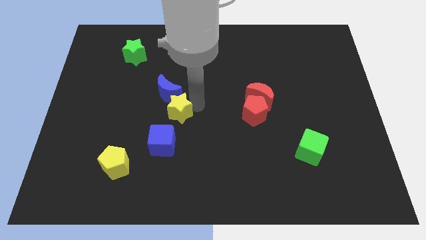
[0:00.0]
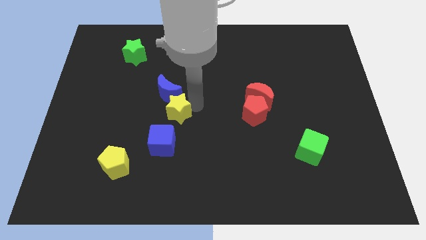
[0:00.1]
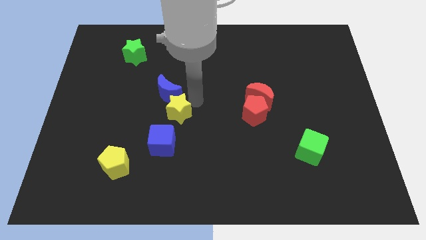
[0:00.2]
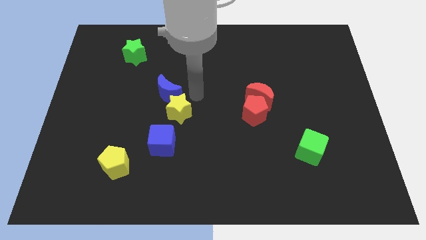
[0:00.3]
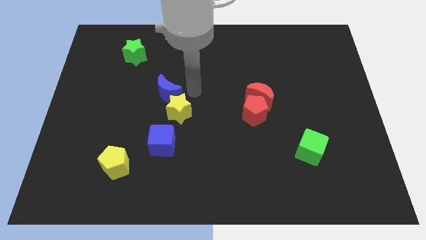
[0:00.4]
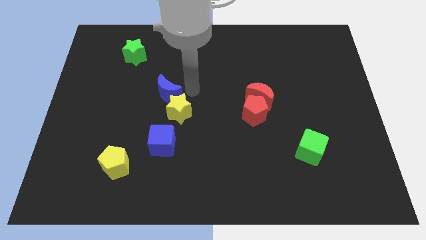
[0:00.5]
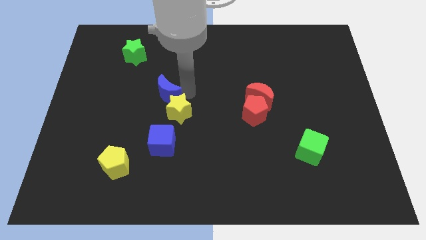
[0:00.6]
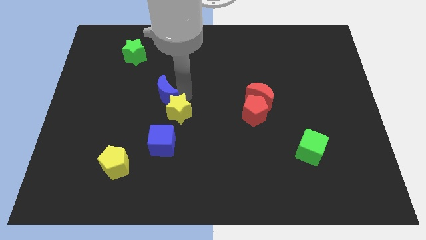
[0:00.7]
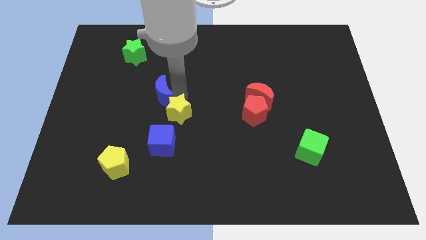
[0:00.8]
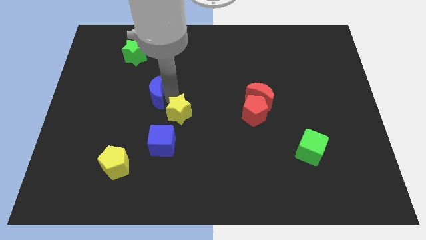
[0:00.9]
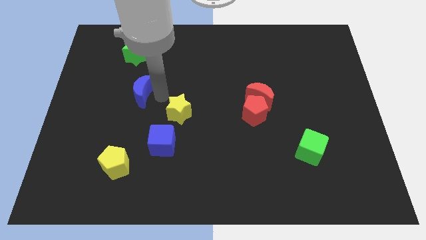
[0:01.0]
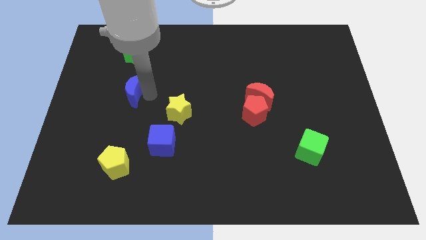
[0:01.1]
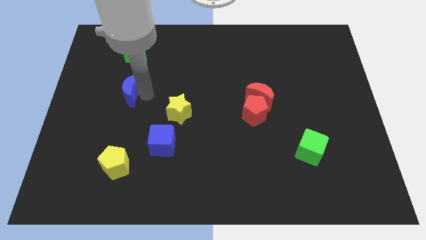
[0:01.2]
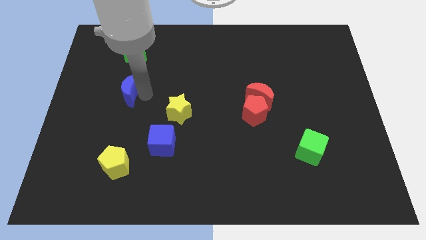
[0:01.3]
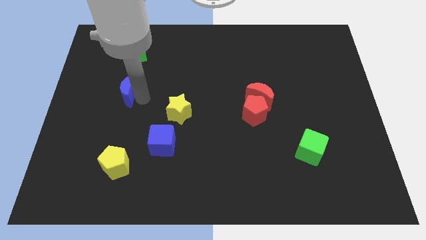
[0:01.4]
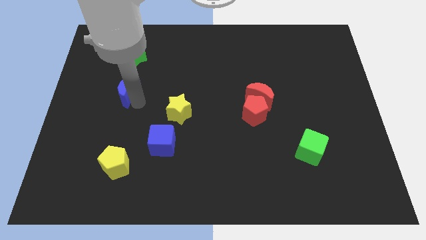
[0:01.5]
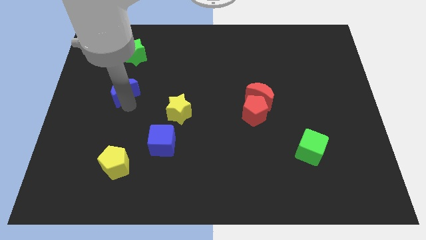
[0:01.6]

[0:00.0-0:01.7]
separate the blue moon from the yellow star

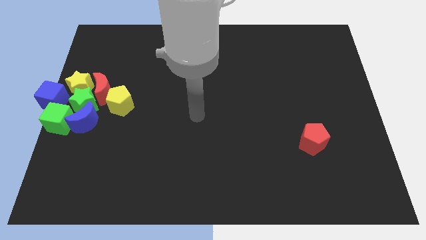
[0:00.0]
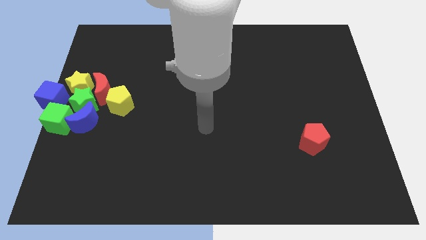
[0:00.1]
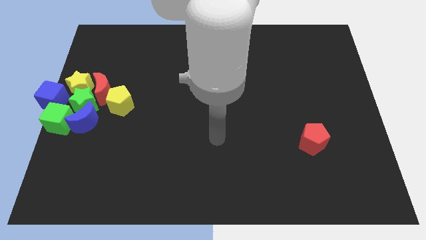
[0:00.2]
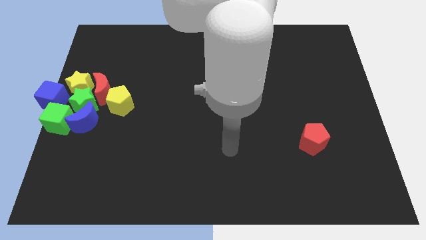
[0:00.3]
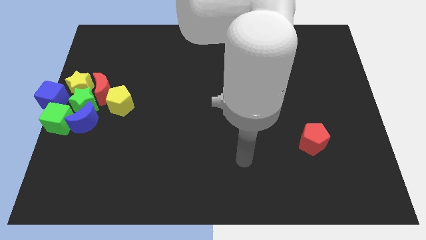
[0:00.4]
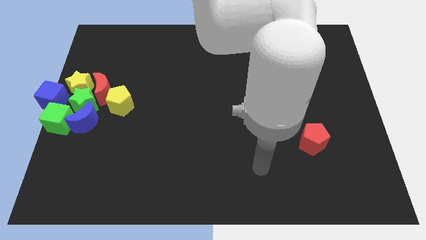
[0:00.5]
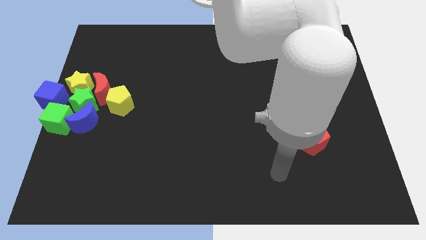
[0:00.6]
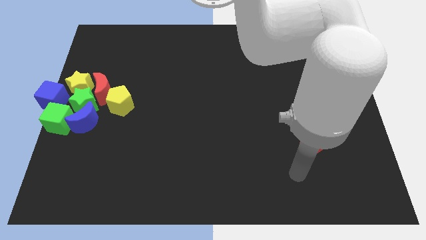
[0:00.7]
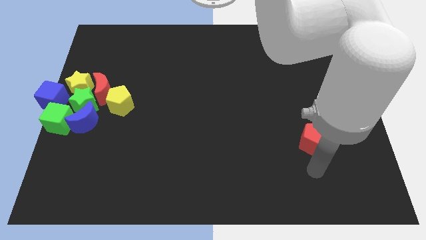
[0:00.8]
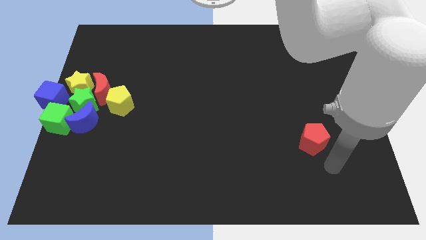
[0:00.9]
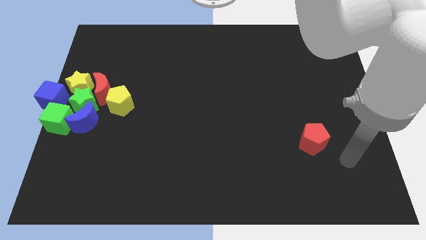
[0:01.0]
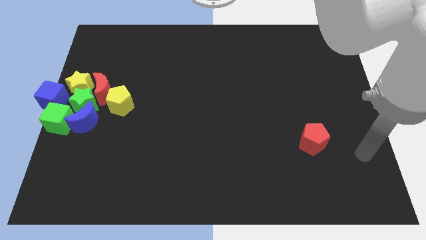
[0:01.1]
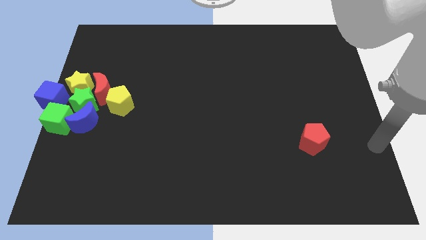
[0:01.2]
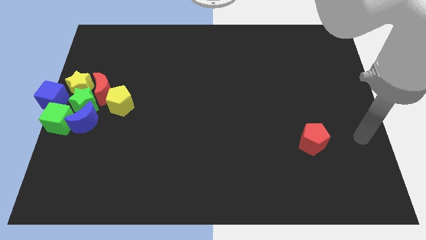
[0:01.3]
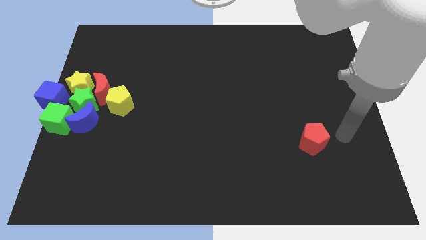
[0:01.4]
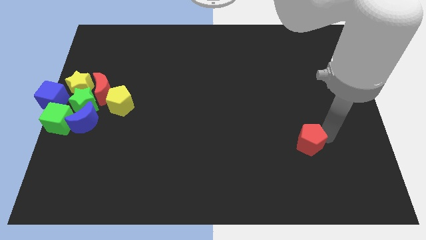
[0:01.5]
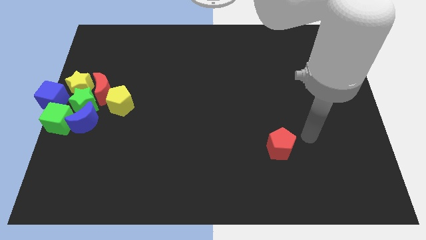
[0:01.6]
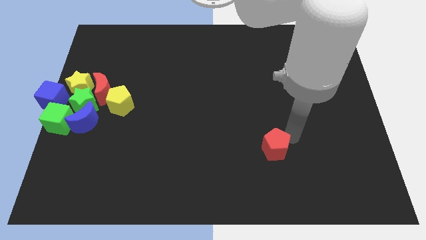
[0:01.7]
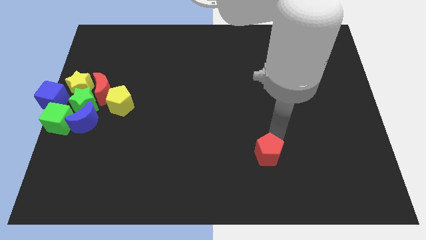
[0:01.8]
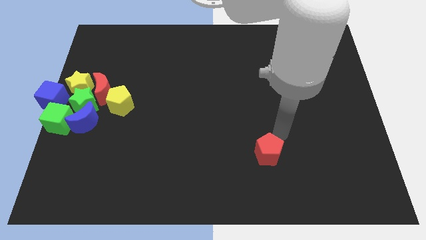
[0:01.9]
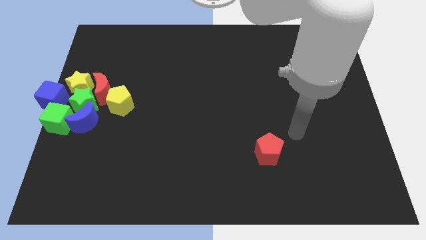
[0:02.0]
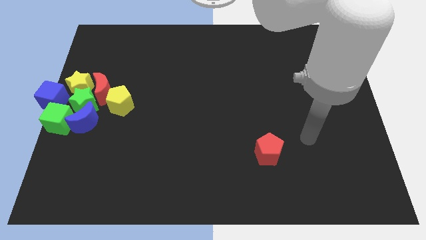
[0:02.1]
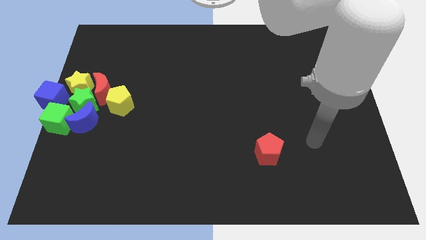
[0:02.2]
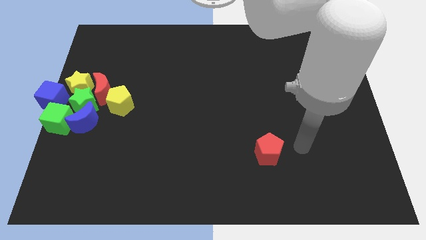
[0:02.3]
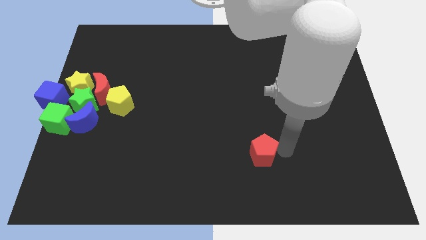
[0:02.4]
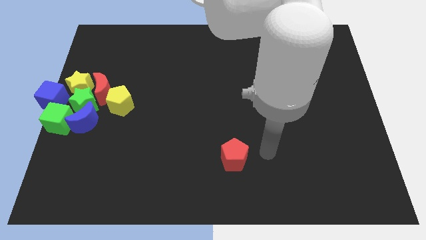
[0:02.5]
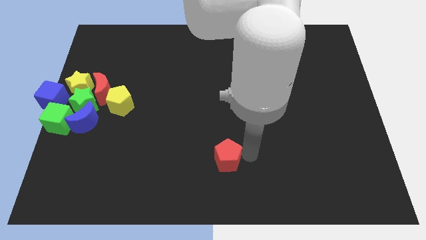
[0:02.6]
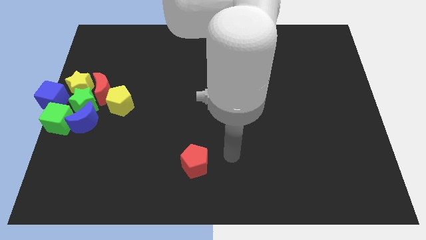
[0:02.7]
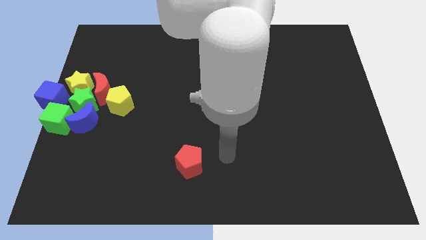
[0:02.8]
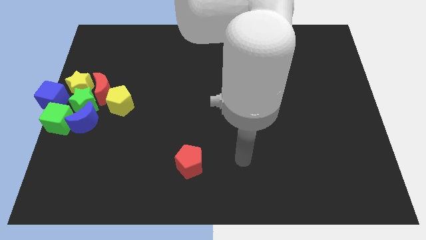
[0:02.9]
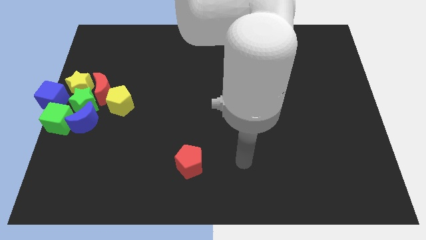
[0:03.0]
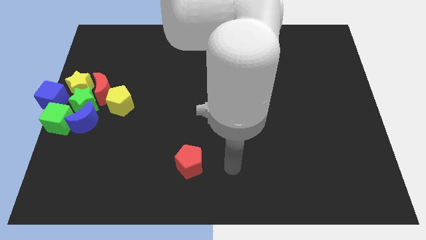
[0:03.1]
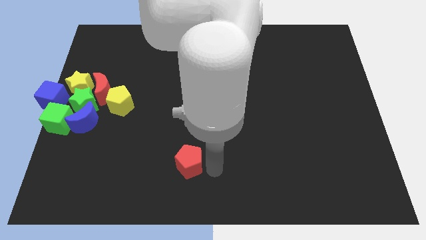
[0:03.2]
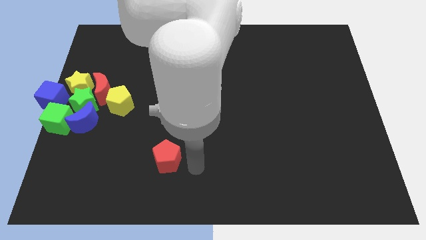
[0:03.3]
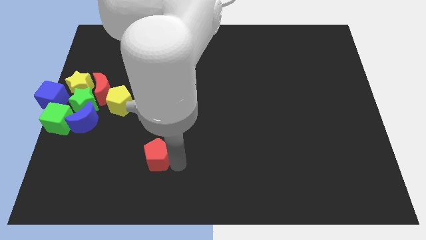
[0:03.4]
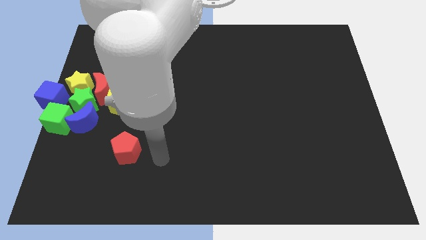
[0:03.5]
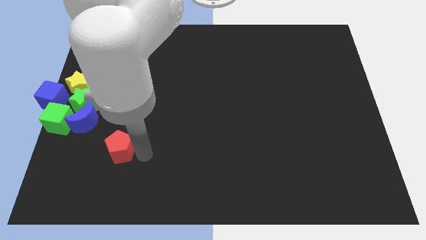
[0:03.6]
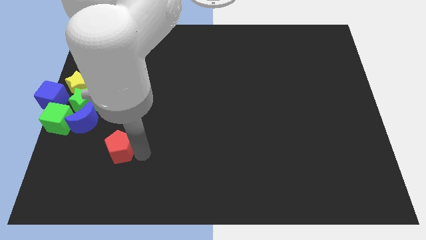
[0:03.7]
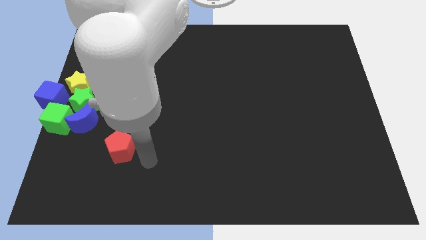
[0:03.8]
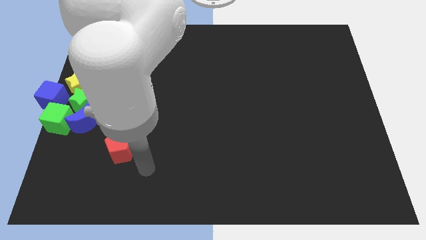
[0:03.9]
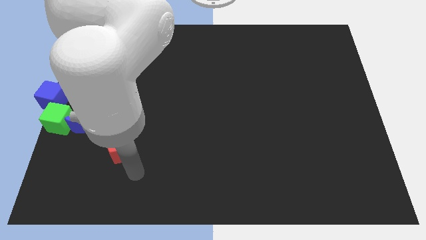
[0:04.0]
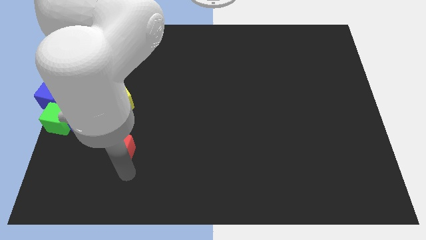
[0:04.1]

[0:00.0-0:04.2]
place the red pentagon below the yellow pentagon

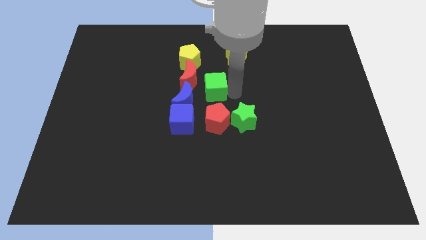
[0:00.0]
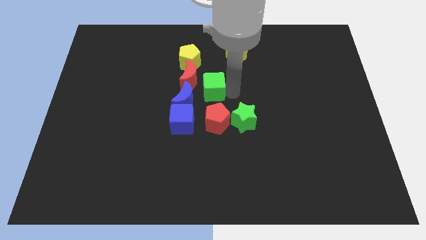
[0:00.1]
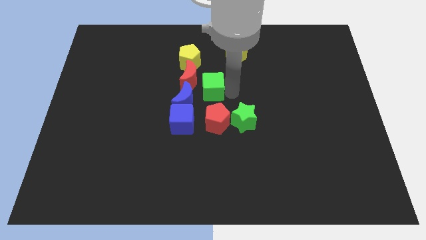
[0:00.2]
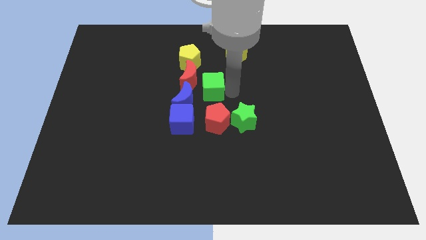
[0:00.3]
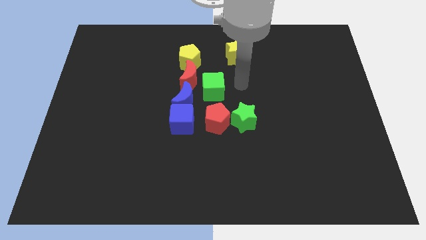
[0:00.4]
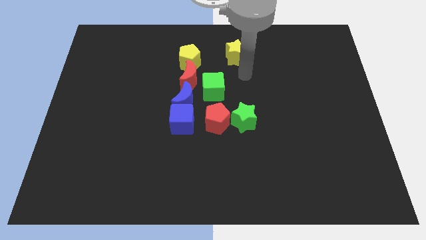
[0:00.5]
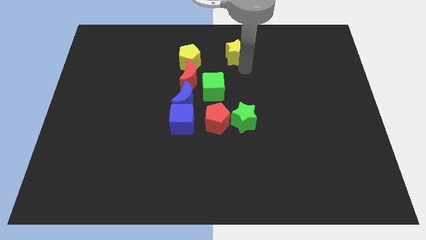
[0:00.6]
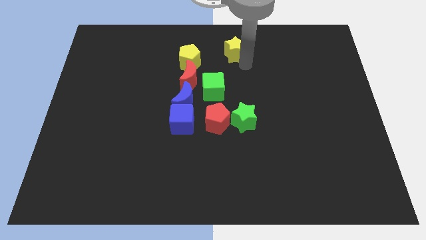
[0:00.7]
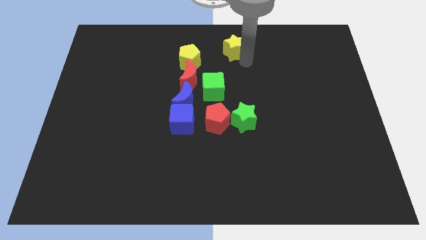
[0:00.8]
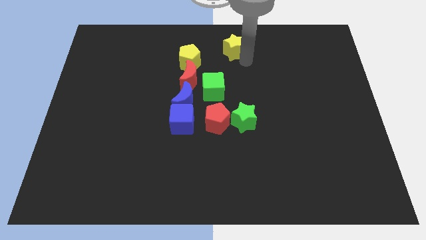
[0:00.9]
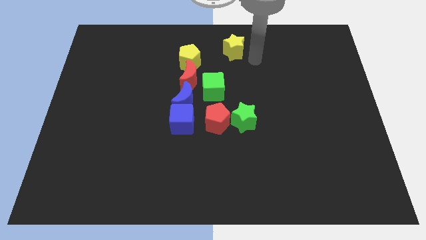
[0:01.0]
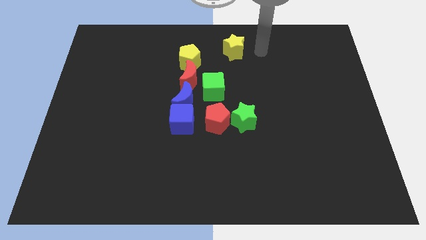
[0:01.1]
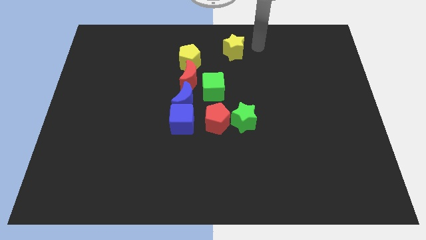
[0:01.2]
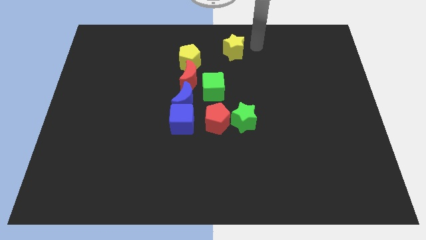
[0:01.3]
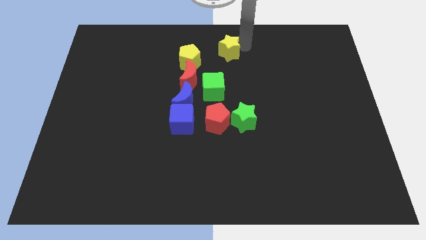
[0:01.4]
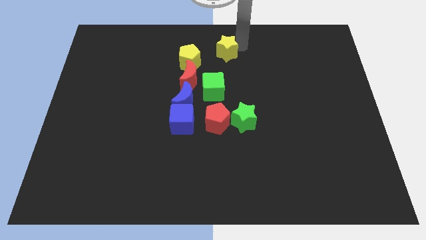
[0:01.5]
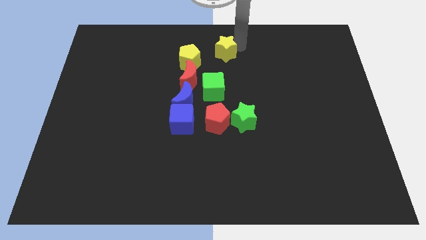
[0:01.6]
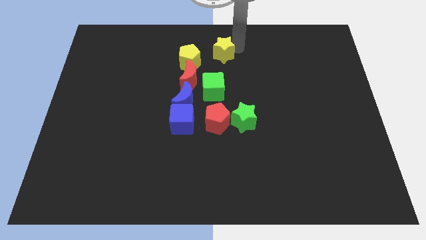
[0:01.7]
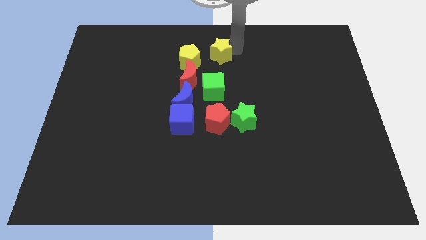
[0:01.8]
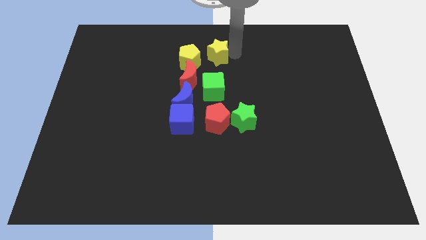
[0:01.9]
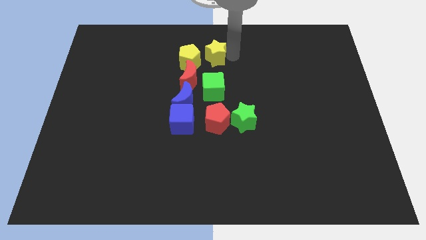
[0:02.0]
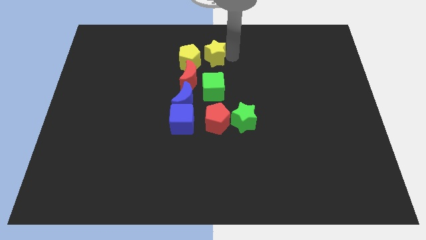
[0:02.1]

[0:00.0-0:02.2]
place the yellow star above the green cube

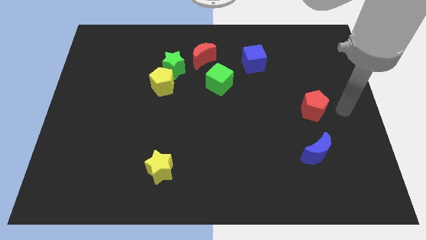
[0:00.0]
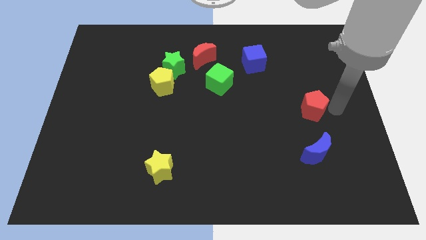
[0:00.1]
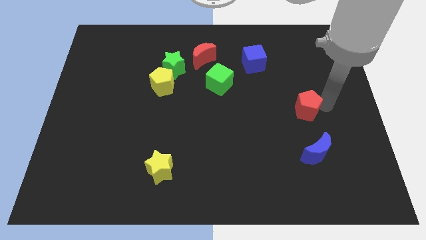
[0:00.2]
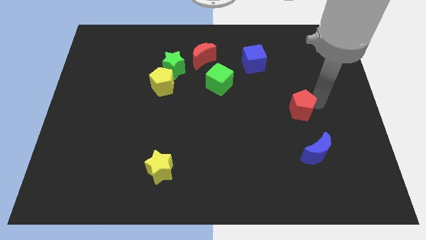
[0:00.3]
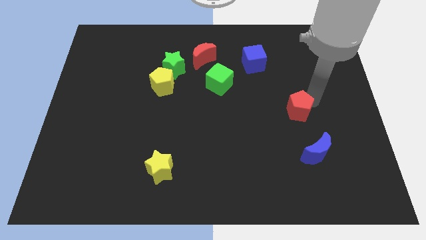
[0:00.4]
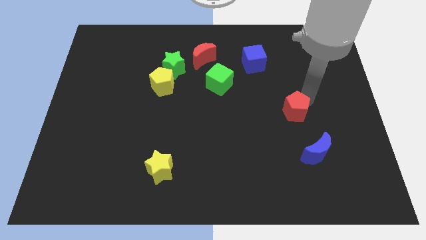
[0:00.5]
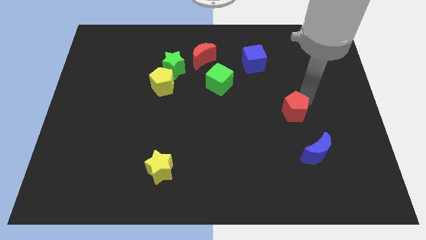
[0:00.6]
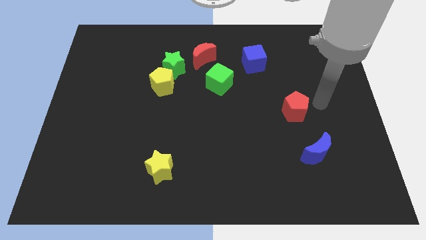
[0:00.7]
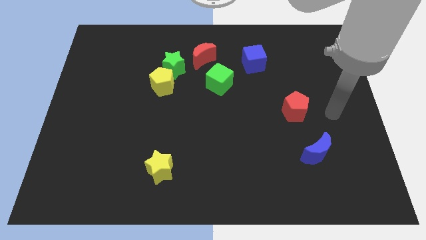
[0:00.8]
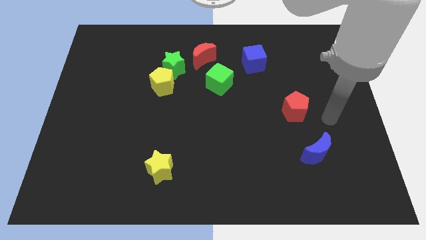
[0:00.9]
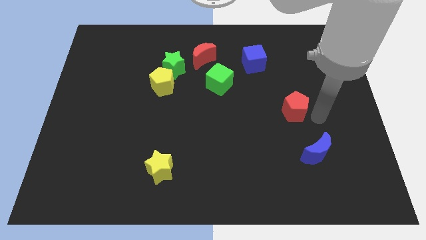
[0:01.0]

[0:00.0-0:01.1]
move the red pentagon diagonally on the top left side of the blue moon
